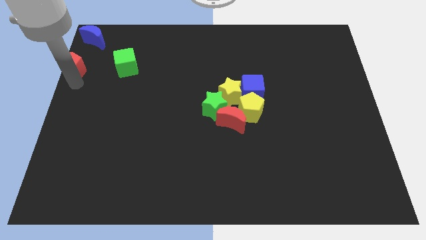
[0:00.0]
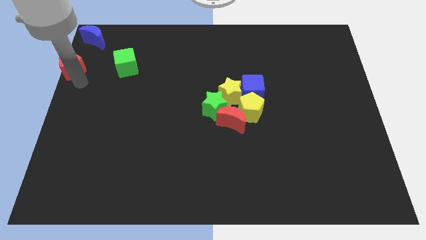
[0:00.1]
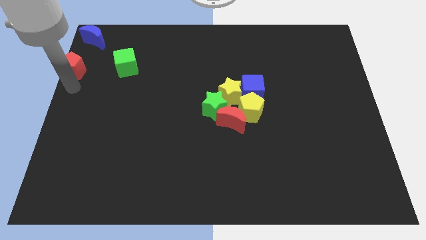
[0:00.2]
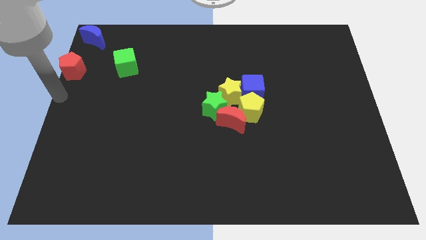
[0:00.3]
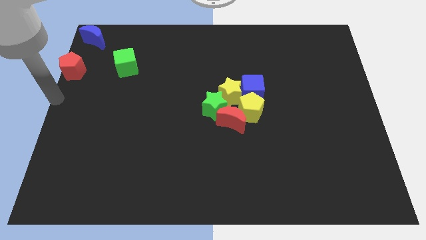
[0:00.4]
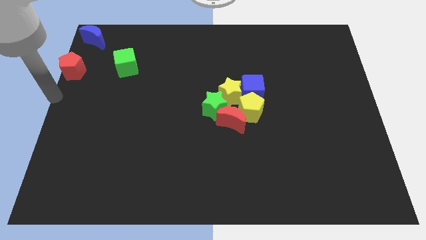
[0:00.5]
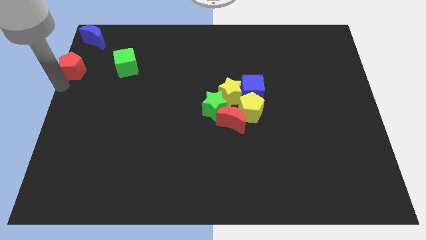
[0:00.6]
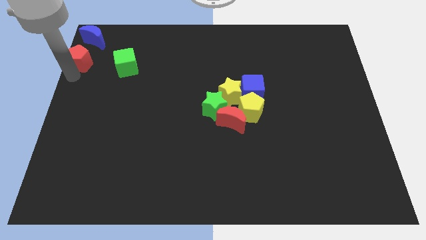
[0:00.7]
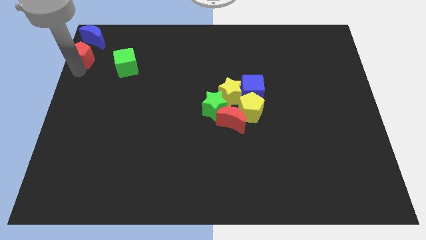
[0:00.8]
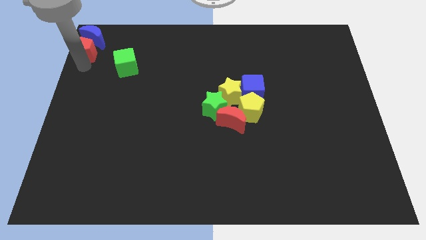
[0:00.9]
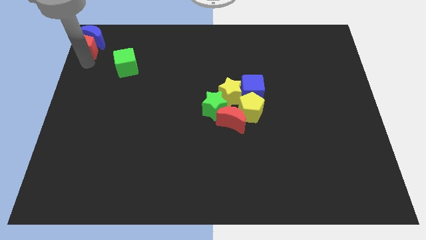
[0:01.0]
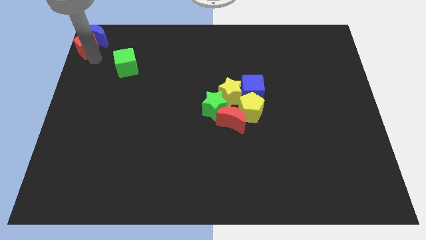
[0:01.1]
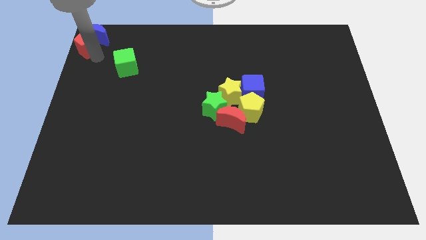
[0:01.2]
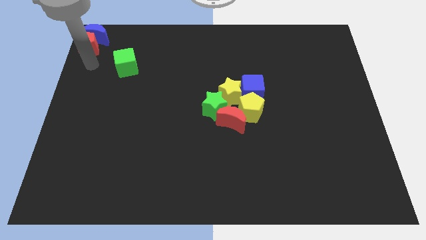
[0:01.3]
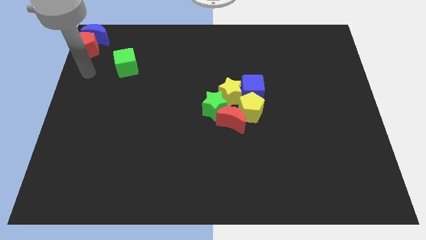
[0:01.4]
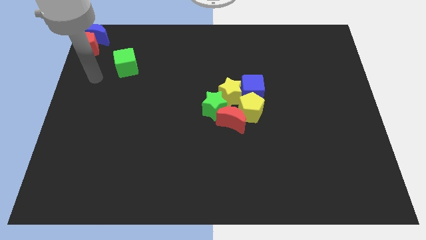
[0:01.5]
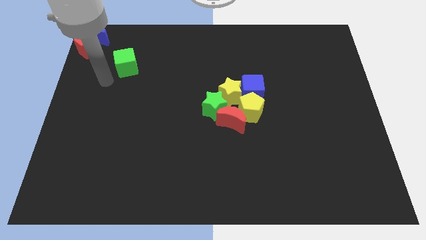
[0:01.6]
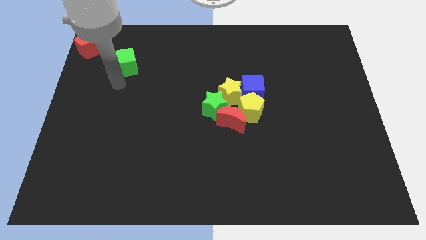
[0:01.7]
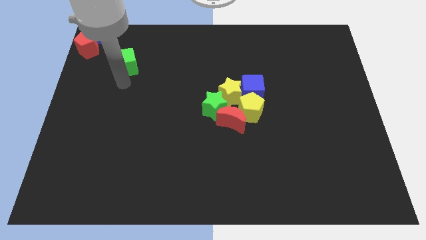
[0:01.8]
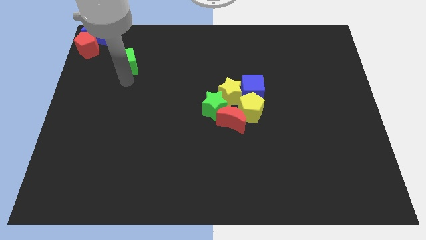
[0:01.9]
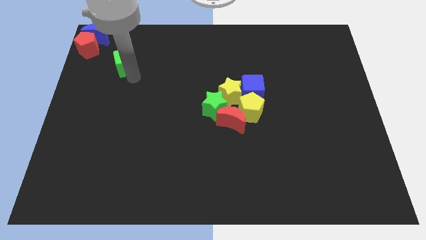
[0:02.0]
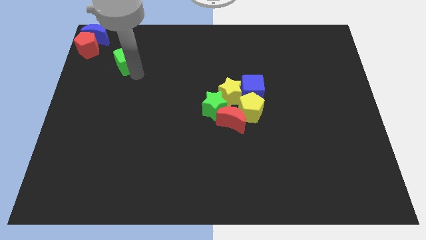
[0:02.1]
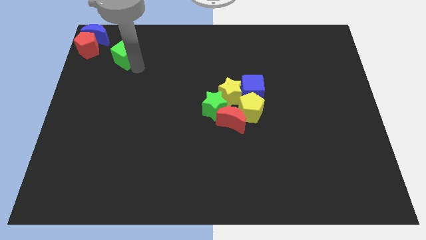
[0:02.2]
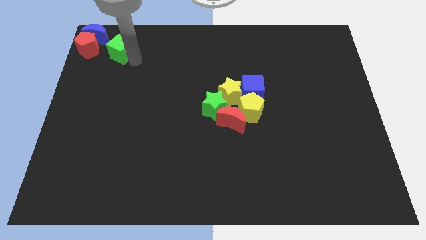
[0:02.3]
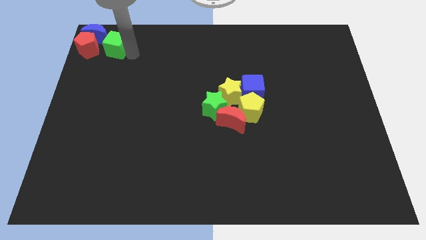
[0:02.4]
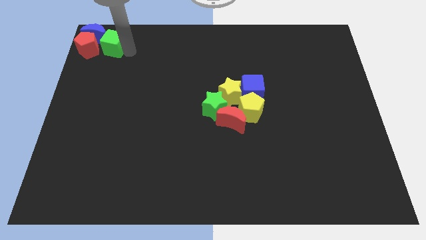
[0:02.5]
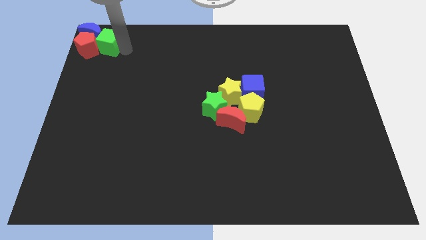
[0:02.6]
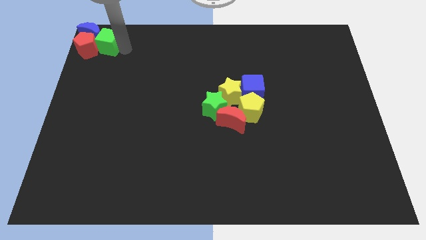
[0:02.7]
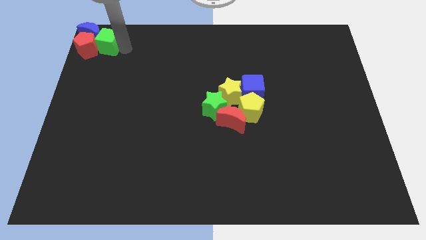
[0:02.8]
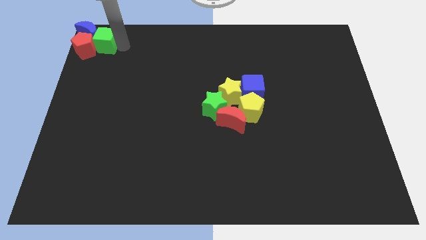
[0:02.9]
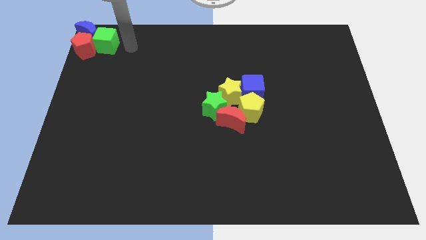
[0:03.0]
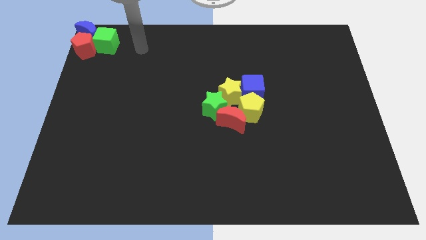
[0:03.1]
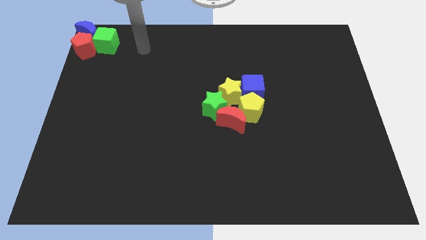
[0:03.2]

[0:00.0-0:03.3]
move top left blocks together

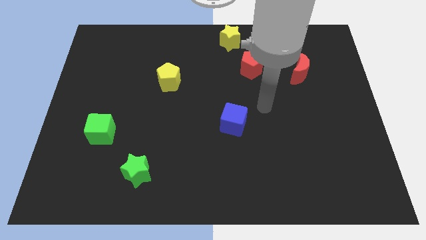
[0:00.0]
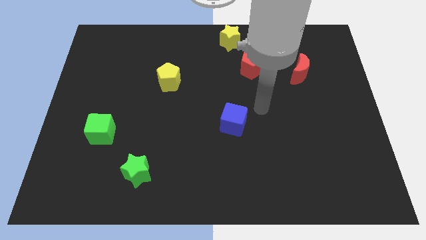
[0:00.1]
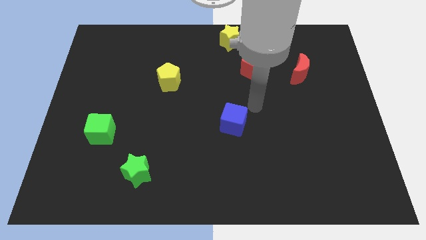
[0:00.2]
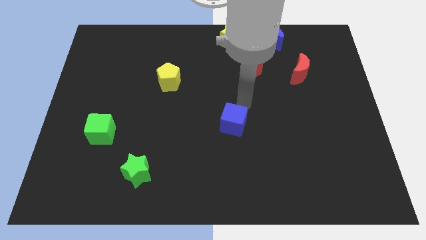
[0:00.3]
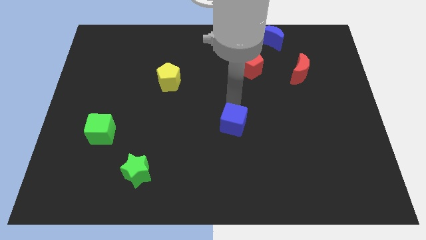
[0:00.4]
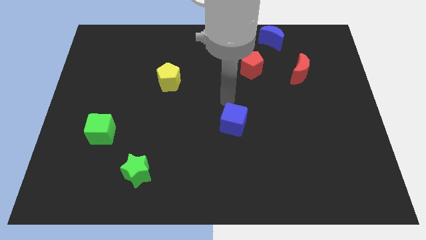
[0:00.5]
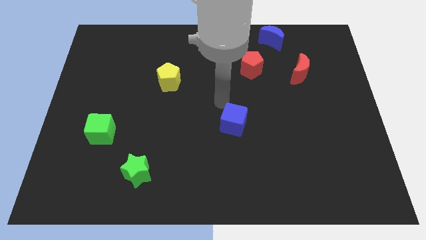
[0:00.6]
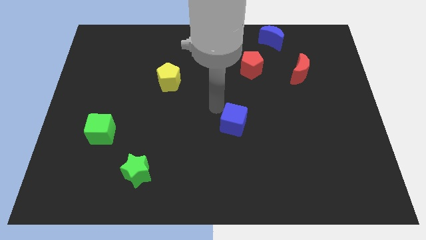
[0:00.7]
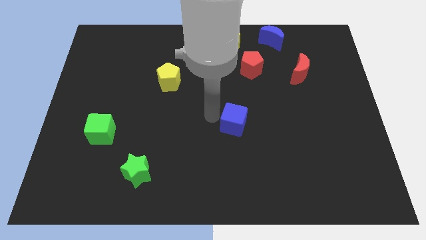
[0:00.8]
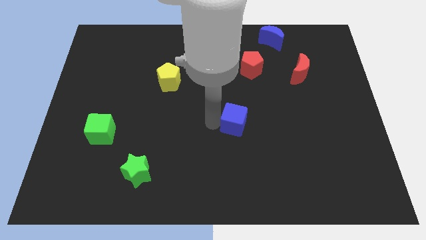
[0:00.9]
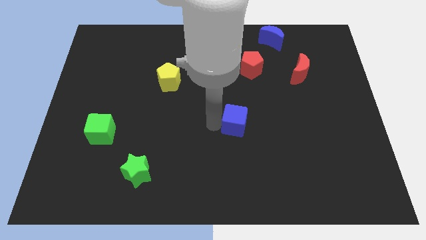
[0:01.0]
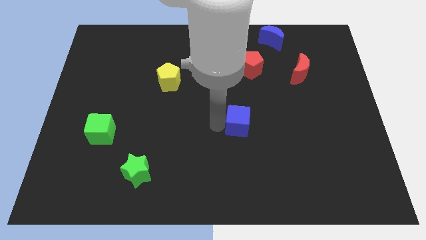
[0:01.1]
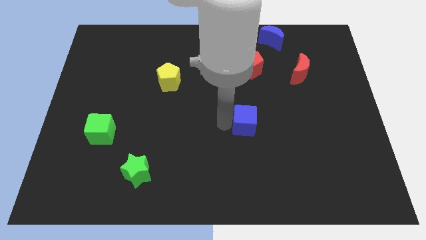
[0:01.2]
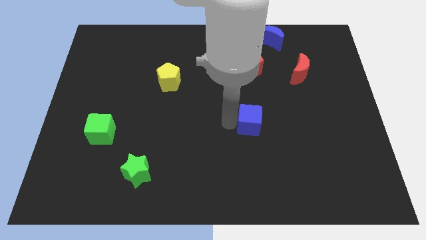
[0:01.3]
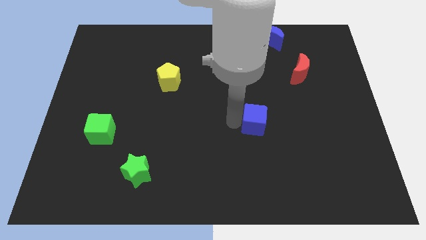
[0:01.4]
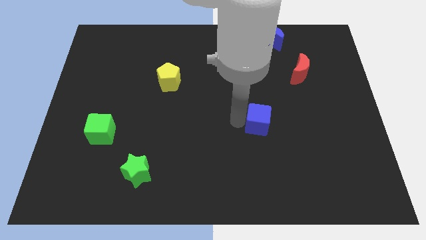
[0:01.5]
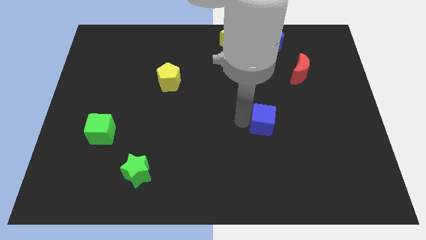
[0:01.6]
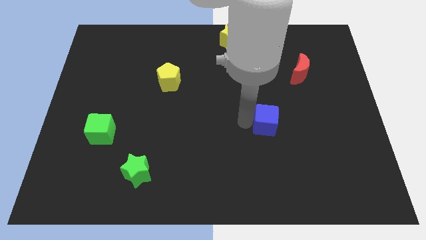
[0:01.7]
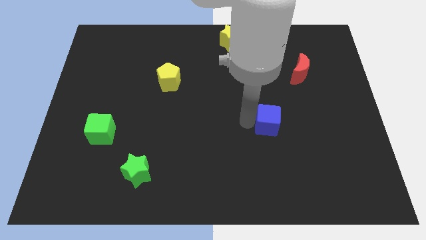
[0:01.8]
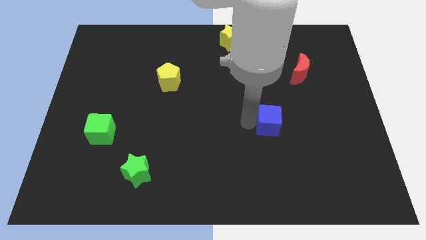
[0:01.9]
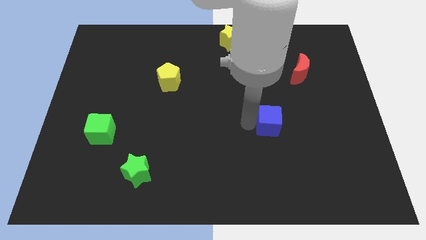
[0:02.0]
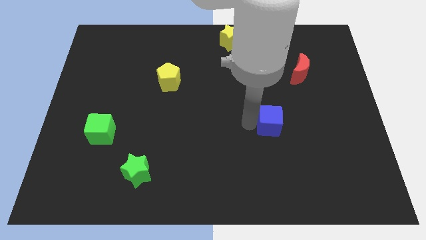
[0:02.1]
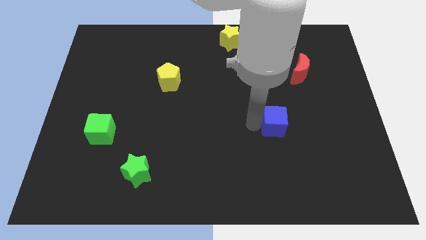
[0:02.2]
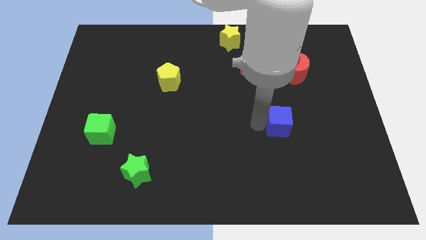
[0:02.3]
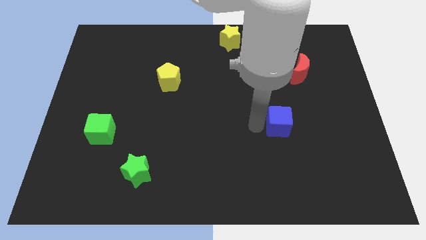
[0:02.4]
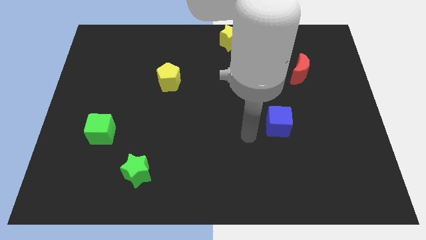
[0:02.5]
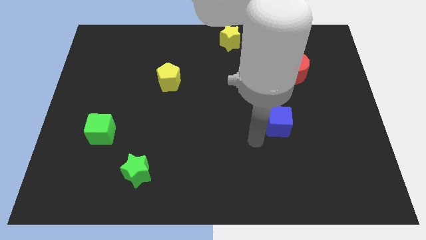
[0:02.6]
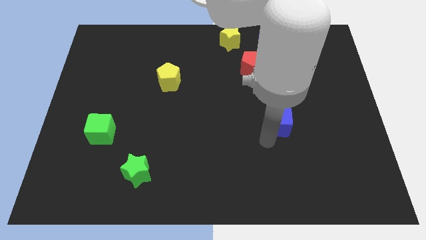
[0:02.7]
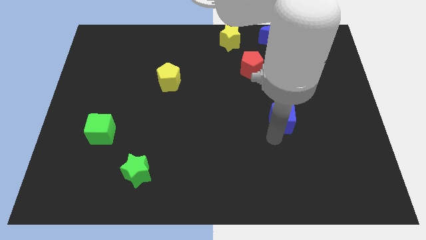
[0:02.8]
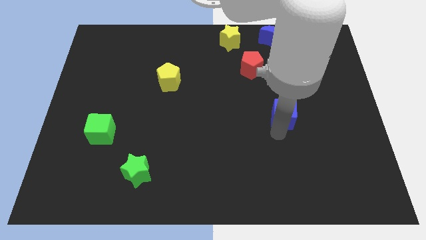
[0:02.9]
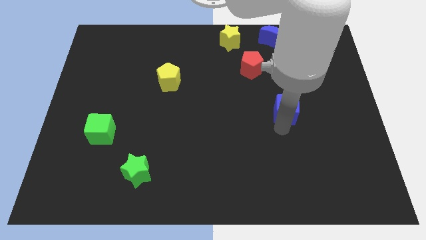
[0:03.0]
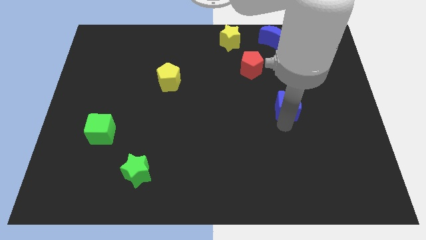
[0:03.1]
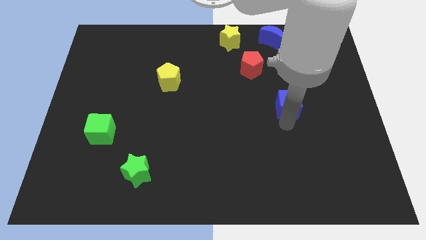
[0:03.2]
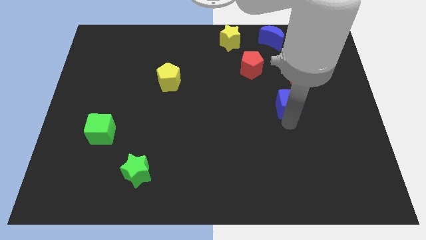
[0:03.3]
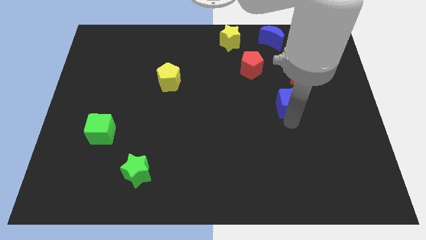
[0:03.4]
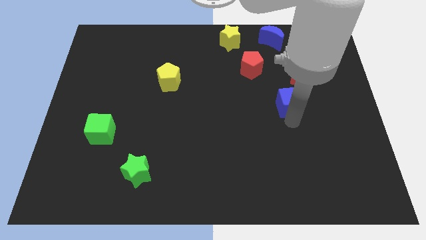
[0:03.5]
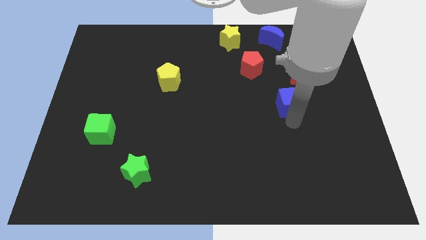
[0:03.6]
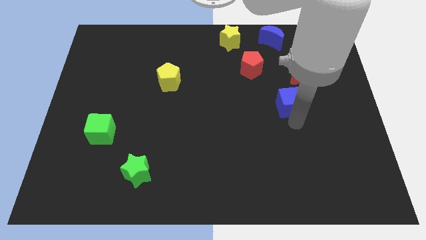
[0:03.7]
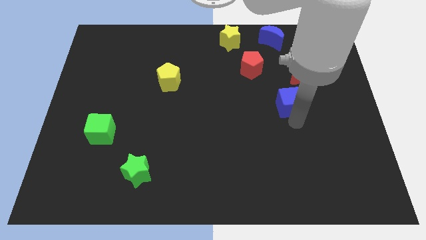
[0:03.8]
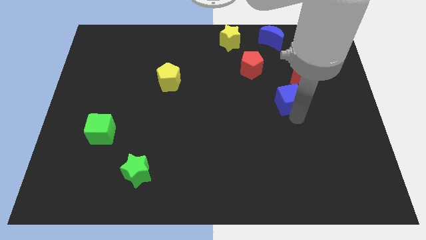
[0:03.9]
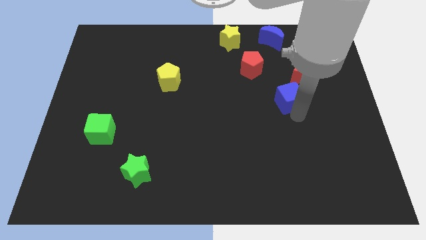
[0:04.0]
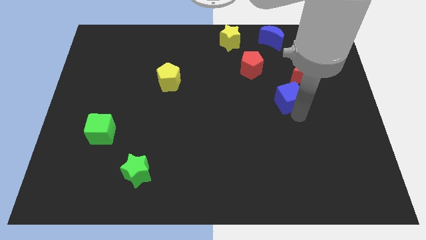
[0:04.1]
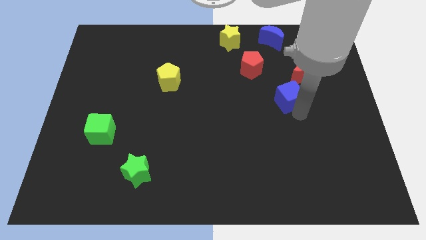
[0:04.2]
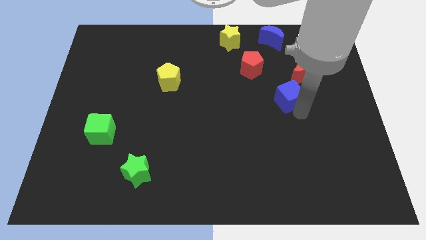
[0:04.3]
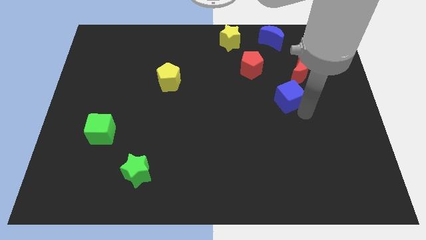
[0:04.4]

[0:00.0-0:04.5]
move the blue cube to the bottom of the red crescent

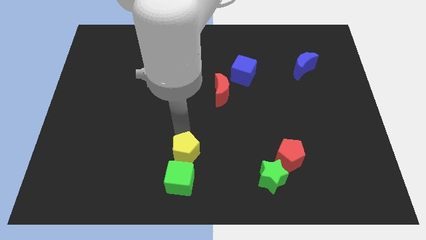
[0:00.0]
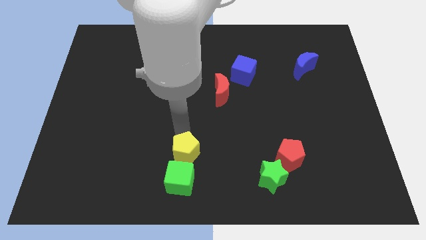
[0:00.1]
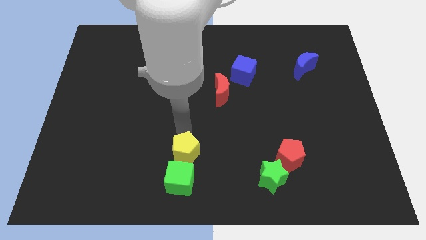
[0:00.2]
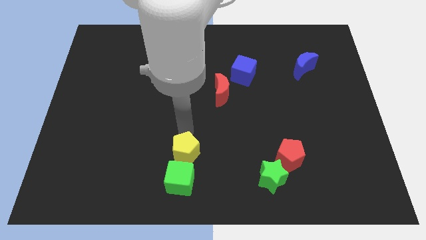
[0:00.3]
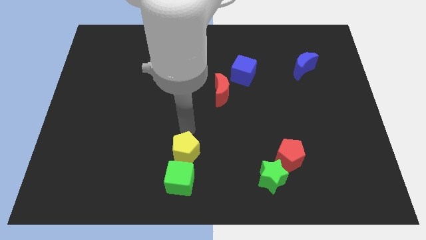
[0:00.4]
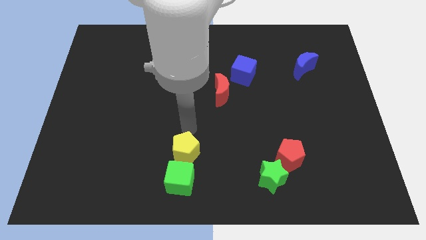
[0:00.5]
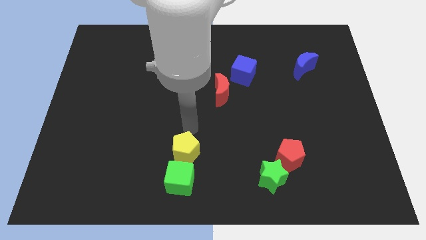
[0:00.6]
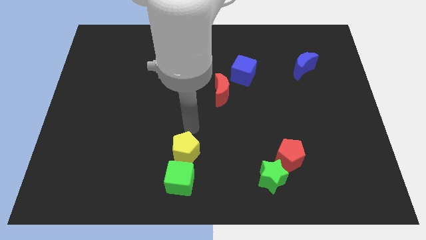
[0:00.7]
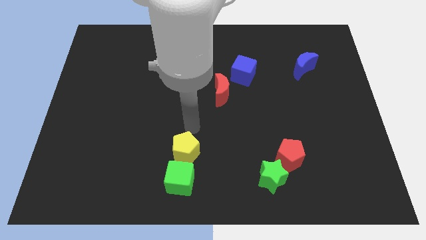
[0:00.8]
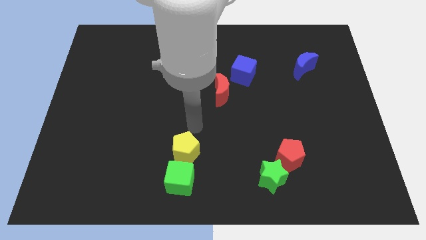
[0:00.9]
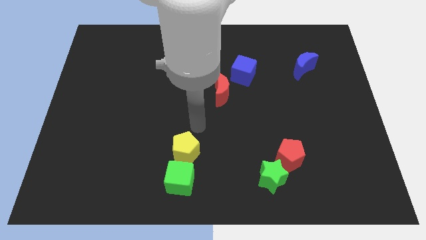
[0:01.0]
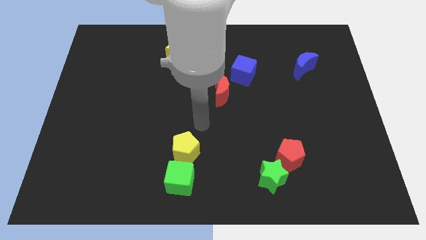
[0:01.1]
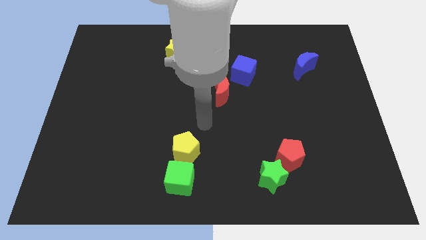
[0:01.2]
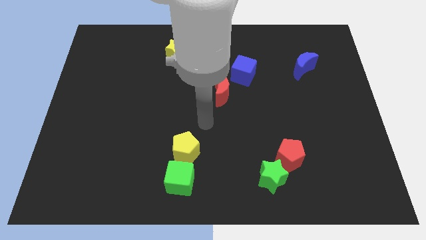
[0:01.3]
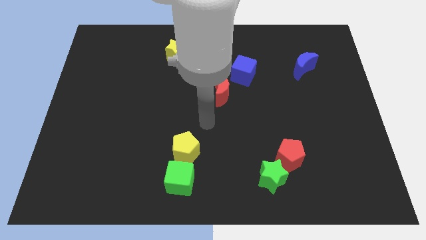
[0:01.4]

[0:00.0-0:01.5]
point your arm in between the red moon and yellow pentagon
